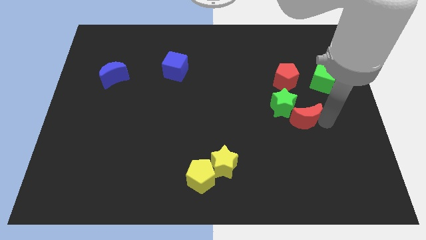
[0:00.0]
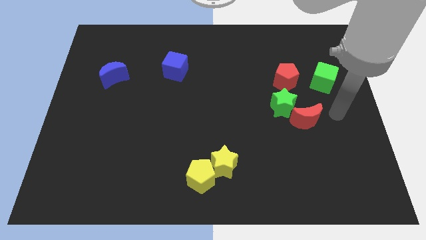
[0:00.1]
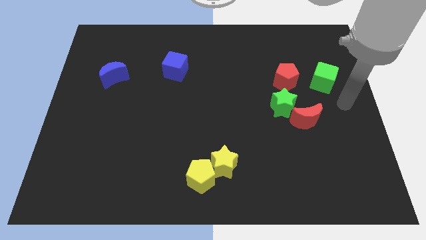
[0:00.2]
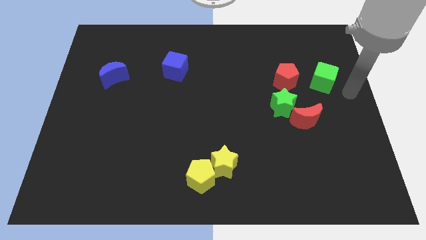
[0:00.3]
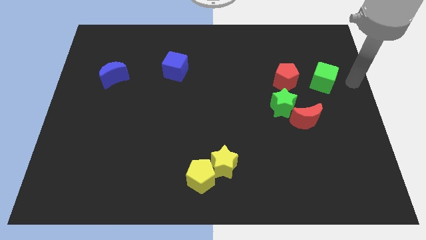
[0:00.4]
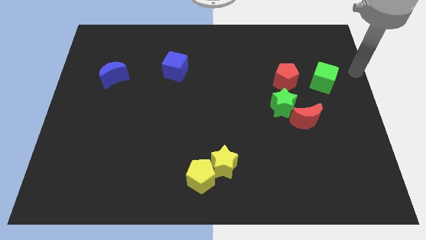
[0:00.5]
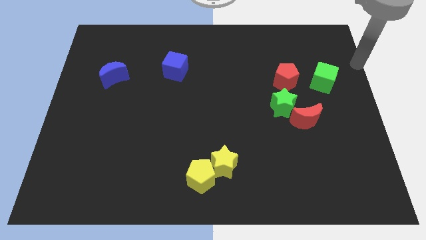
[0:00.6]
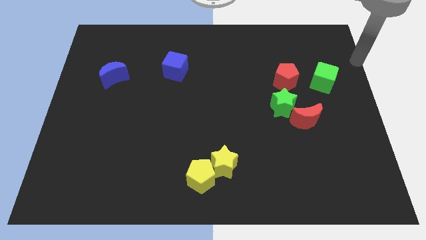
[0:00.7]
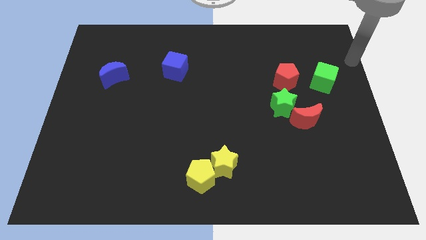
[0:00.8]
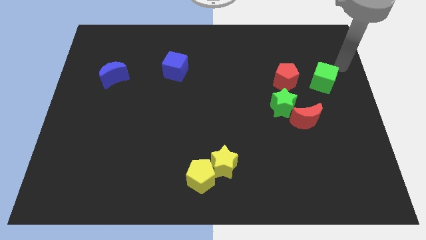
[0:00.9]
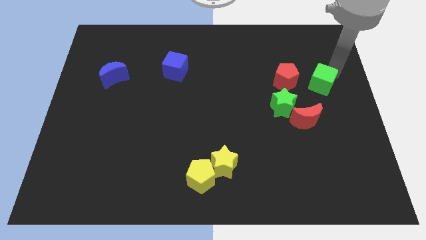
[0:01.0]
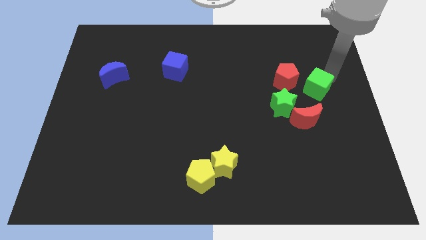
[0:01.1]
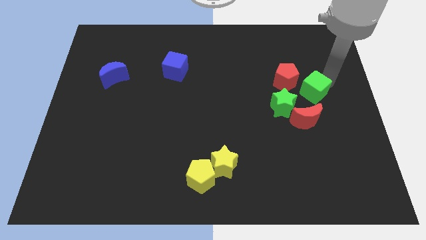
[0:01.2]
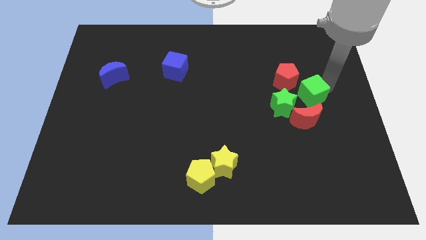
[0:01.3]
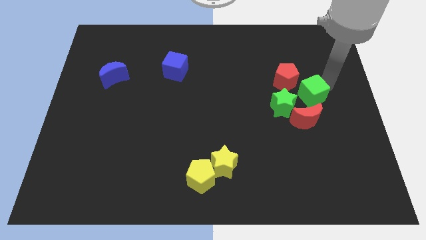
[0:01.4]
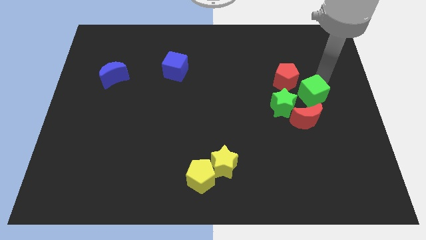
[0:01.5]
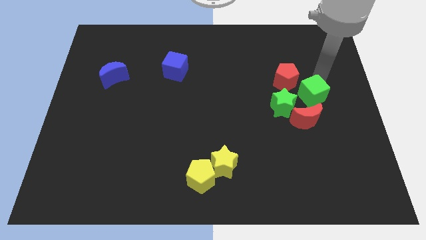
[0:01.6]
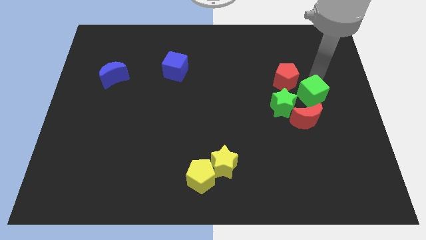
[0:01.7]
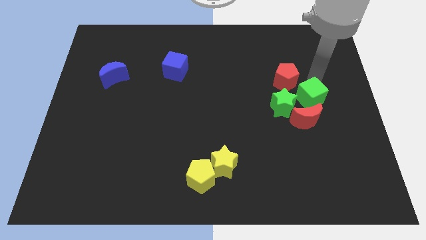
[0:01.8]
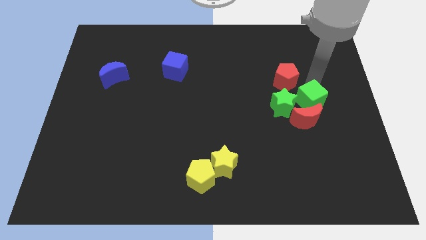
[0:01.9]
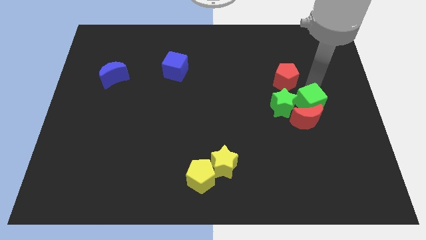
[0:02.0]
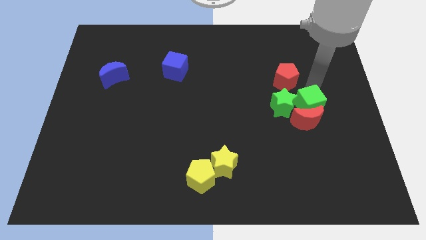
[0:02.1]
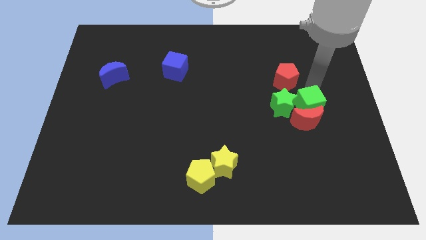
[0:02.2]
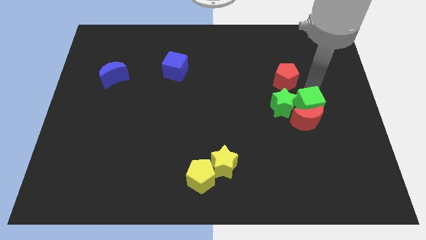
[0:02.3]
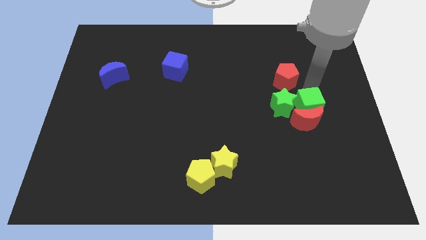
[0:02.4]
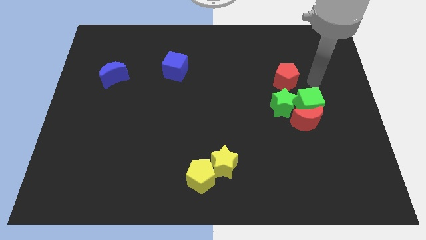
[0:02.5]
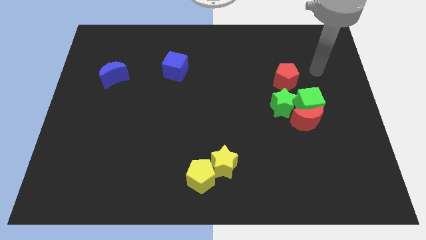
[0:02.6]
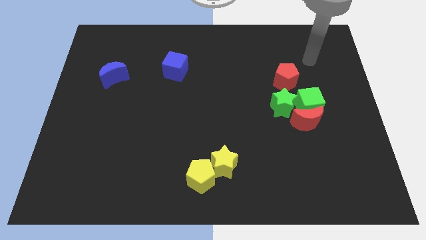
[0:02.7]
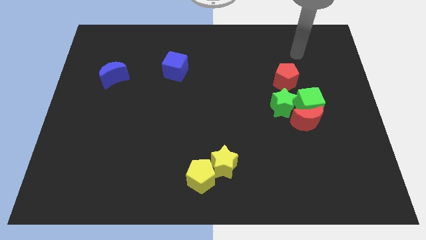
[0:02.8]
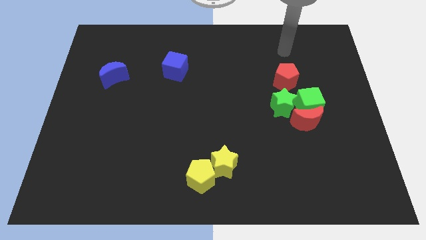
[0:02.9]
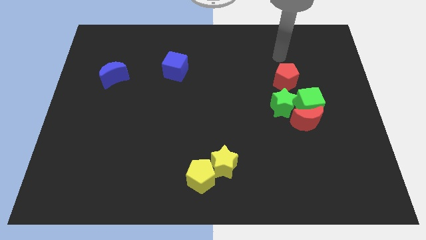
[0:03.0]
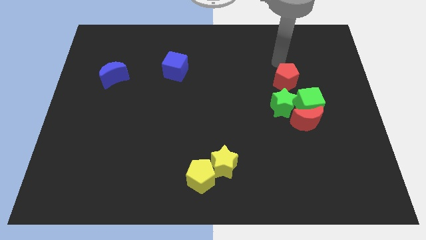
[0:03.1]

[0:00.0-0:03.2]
slide the green cube into the red moon

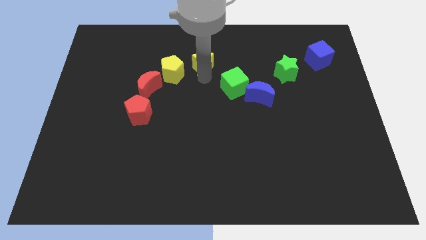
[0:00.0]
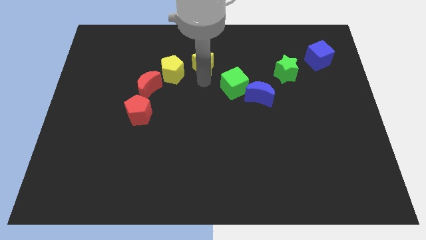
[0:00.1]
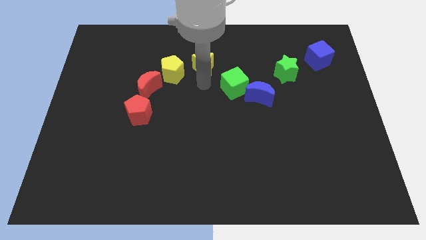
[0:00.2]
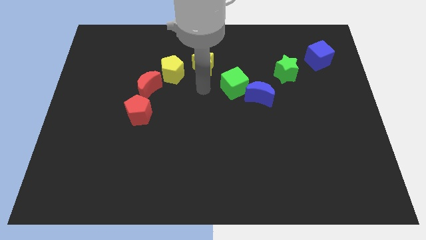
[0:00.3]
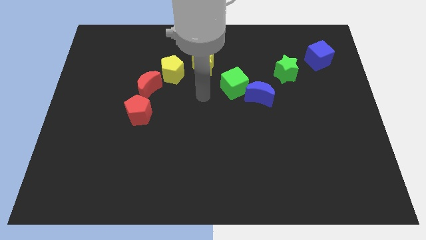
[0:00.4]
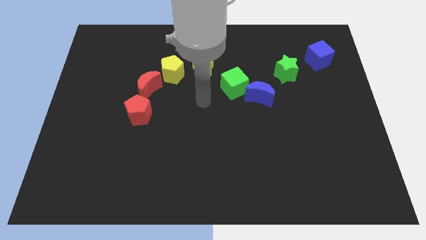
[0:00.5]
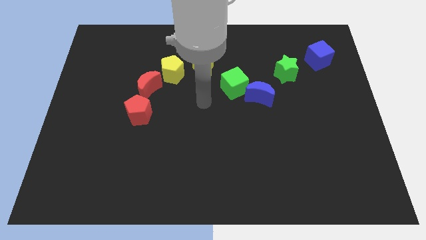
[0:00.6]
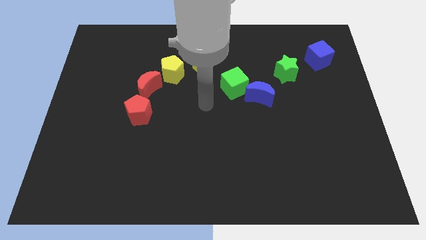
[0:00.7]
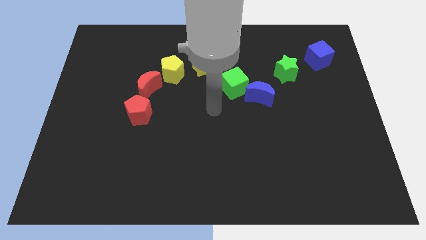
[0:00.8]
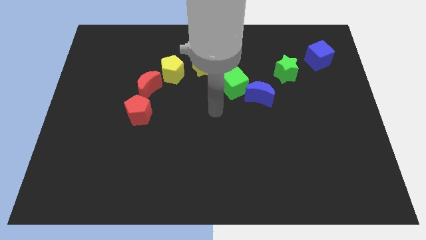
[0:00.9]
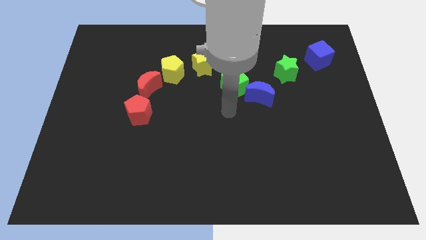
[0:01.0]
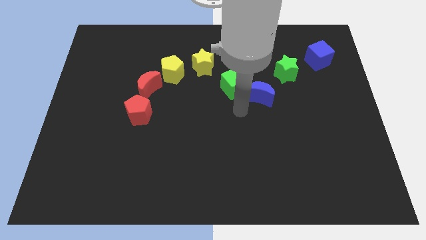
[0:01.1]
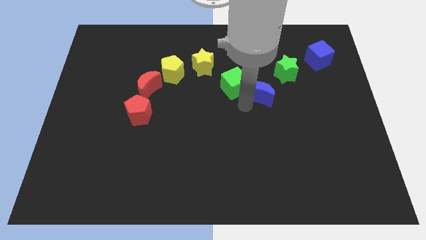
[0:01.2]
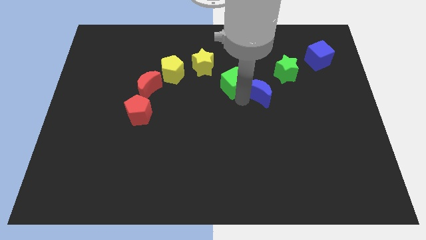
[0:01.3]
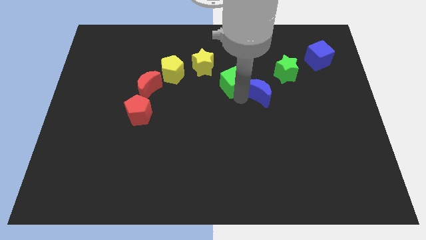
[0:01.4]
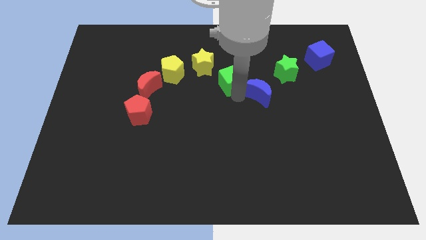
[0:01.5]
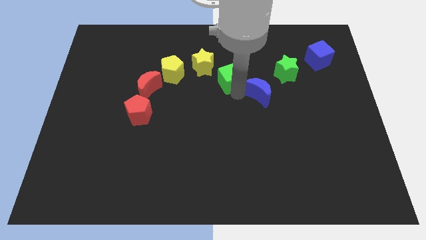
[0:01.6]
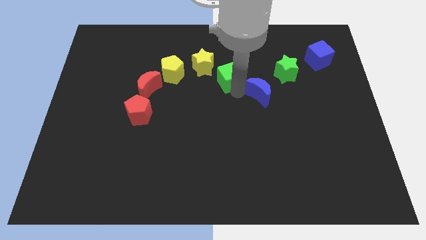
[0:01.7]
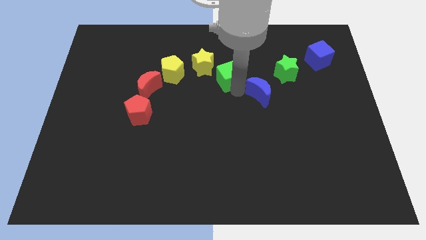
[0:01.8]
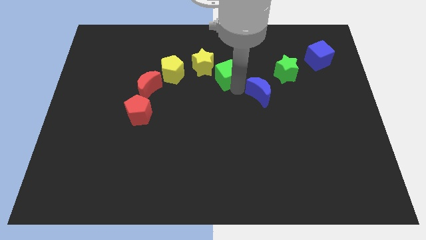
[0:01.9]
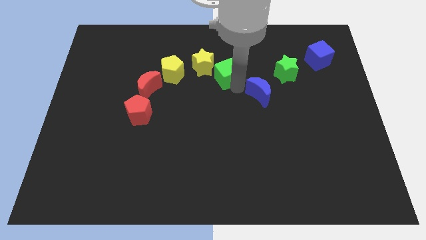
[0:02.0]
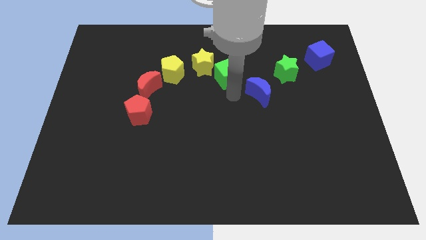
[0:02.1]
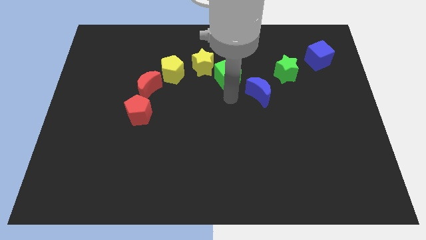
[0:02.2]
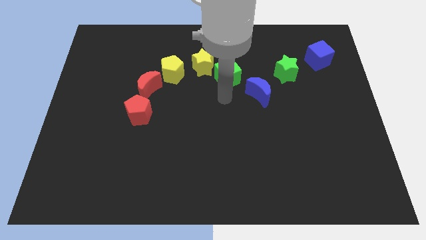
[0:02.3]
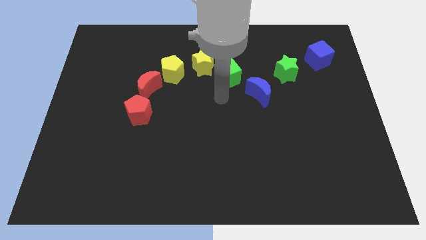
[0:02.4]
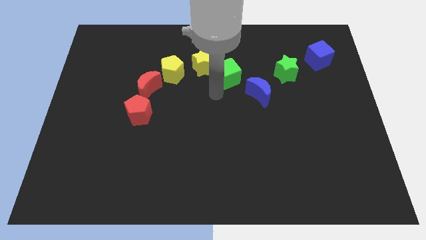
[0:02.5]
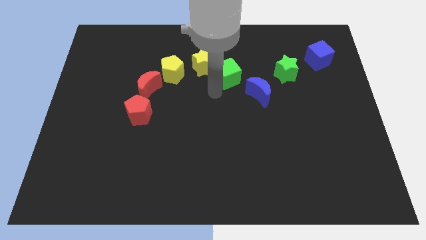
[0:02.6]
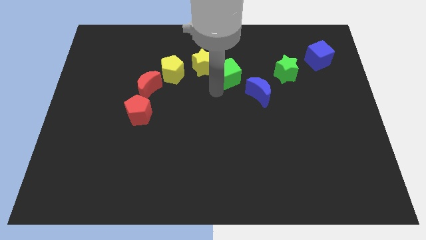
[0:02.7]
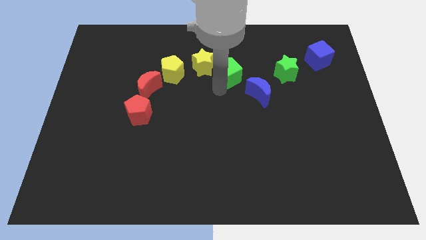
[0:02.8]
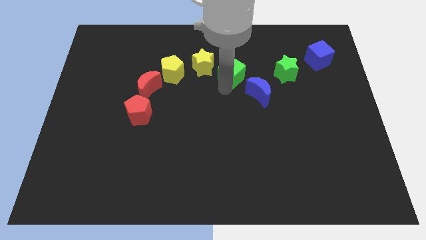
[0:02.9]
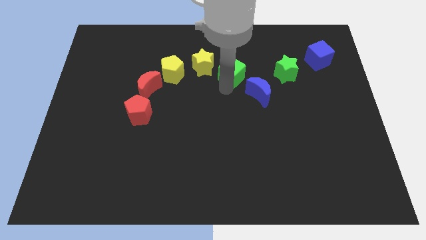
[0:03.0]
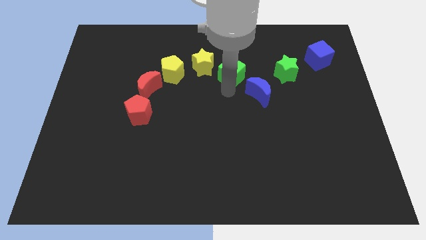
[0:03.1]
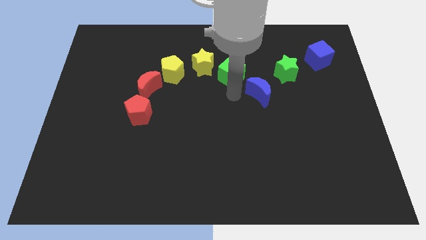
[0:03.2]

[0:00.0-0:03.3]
push the green cube towards the right side of the yellow star

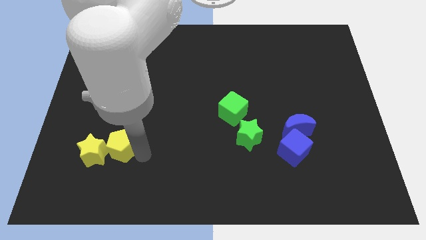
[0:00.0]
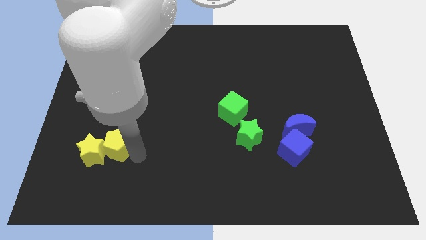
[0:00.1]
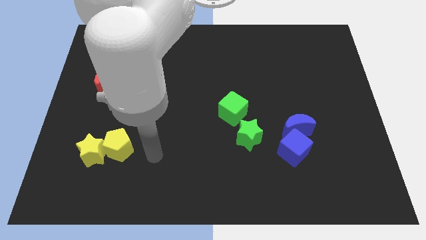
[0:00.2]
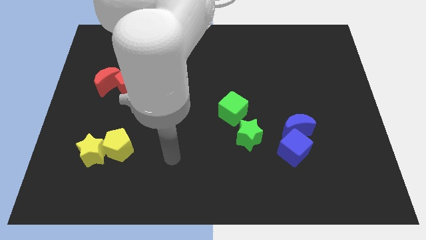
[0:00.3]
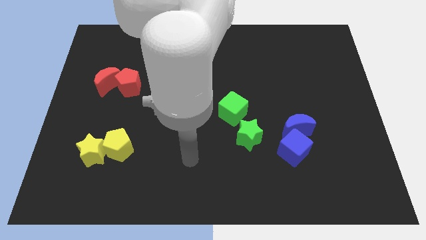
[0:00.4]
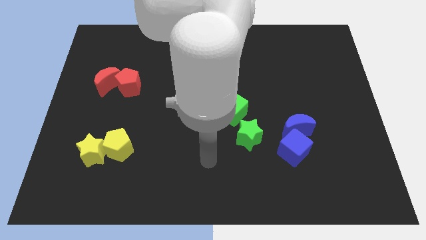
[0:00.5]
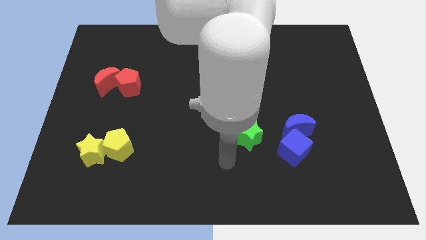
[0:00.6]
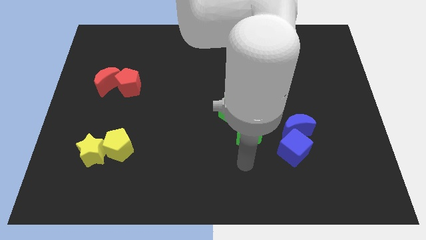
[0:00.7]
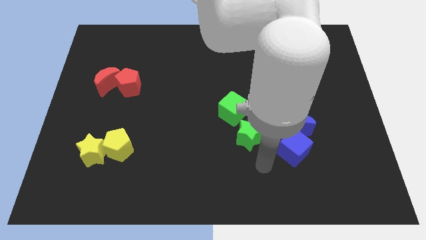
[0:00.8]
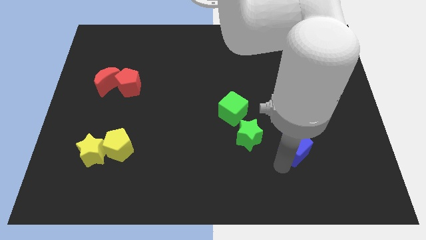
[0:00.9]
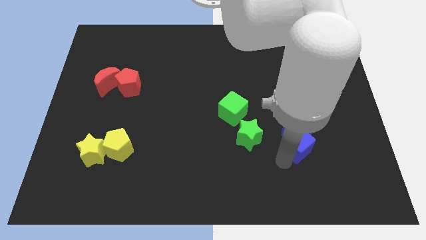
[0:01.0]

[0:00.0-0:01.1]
place your arm at the bottom of the blue cube

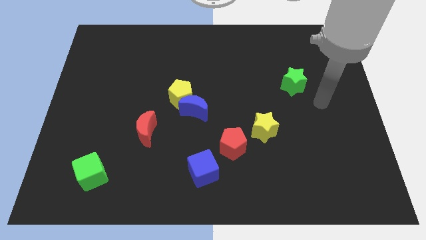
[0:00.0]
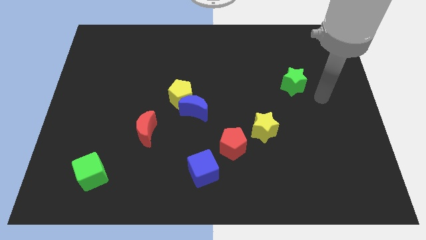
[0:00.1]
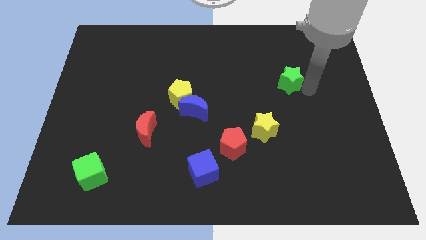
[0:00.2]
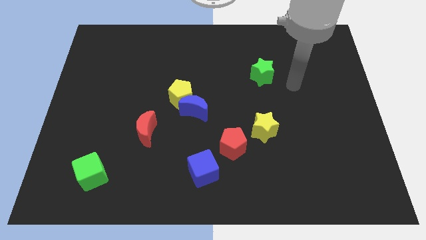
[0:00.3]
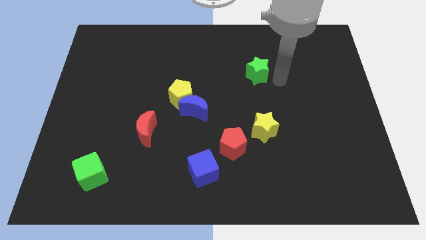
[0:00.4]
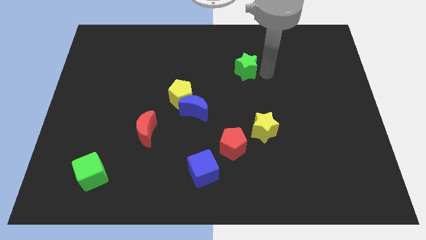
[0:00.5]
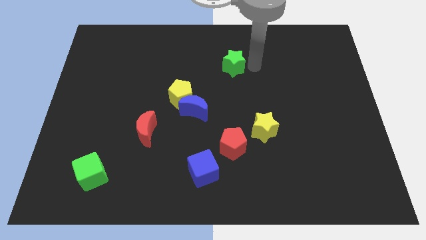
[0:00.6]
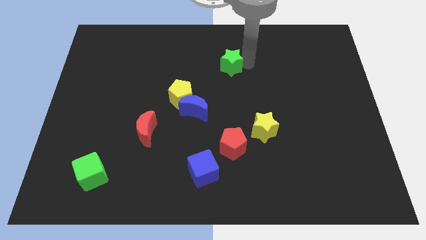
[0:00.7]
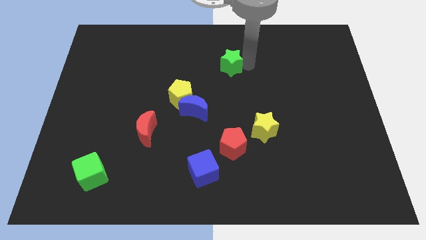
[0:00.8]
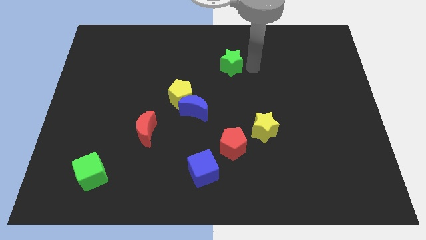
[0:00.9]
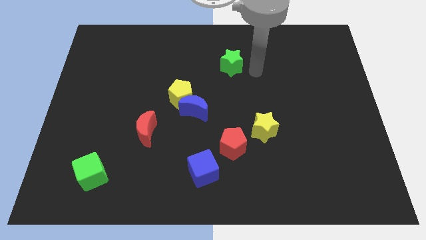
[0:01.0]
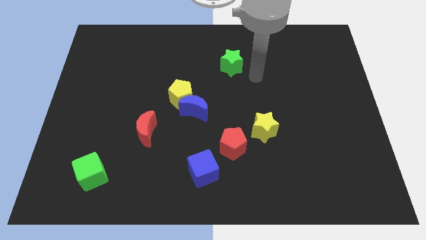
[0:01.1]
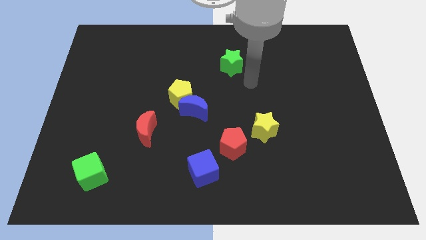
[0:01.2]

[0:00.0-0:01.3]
place green star to the top of red pentagon
